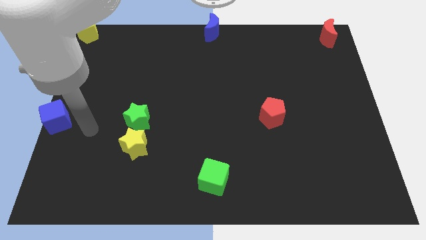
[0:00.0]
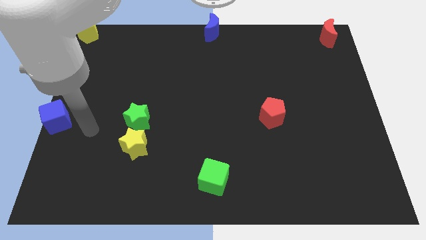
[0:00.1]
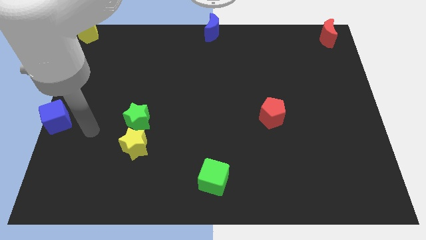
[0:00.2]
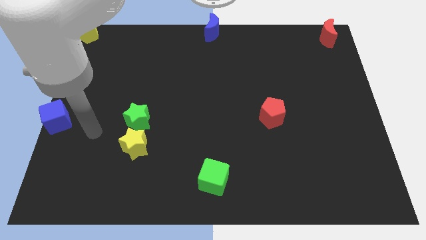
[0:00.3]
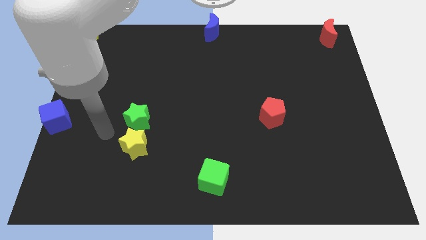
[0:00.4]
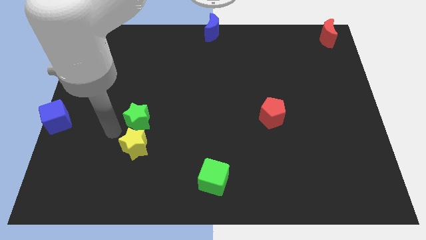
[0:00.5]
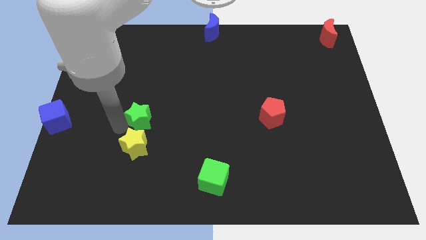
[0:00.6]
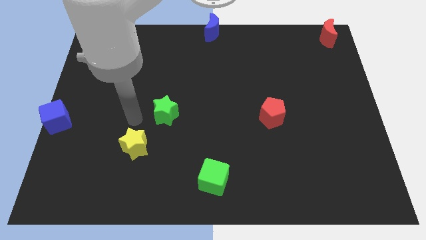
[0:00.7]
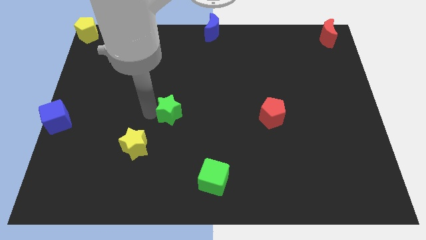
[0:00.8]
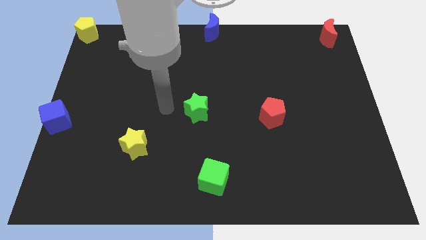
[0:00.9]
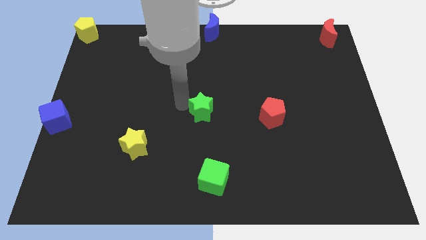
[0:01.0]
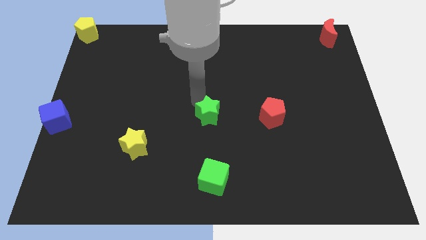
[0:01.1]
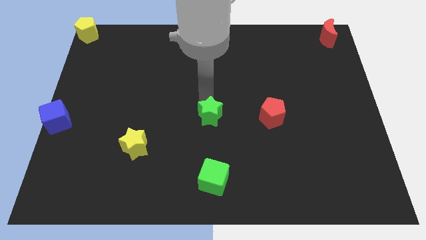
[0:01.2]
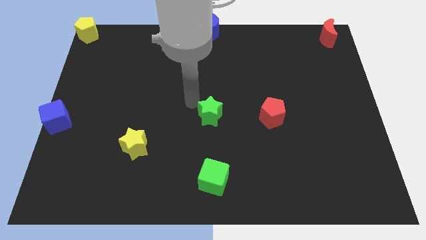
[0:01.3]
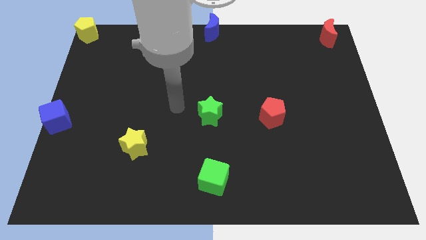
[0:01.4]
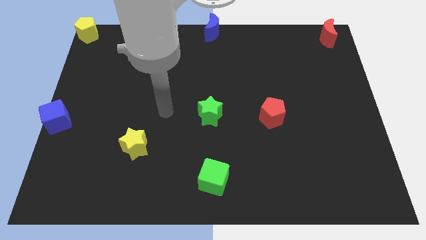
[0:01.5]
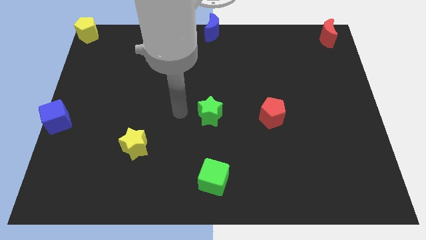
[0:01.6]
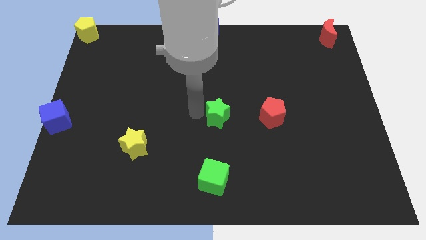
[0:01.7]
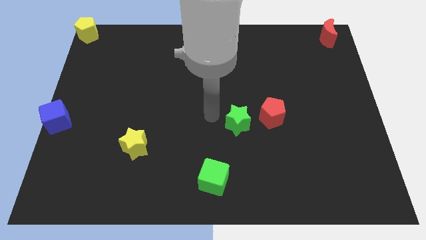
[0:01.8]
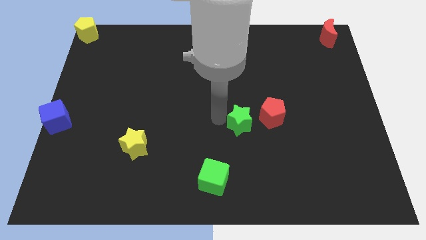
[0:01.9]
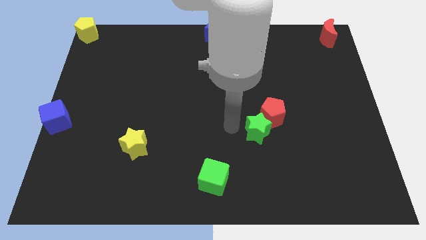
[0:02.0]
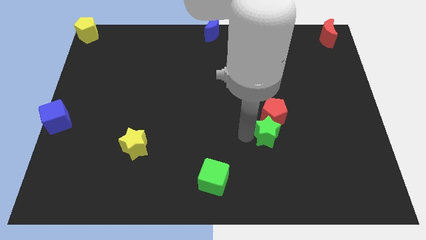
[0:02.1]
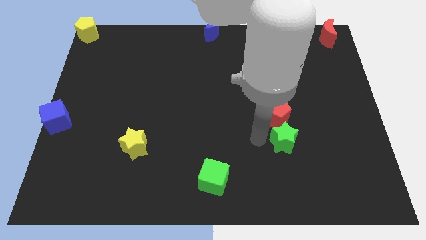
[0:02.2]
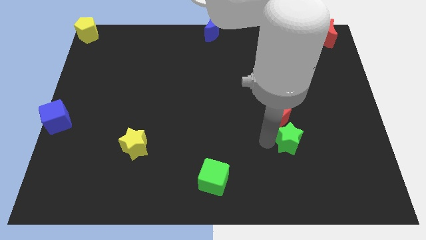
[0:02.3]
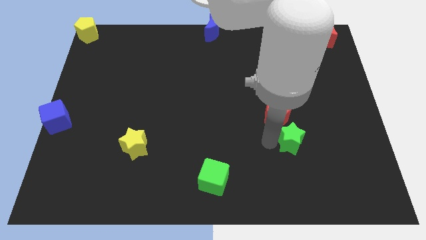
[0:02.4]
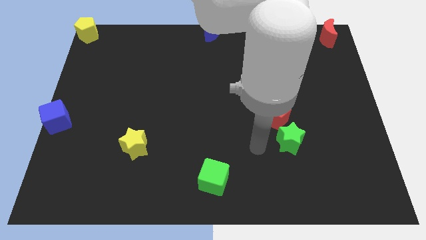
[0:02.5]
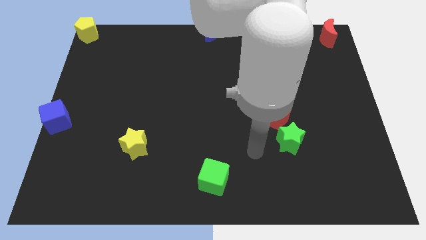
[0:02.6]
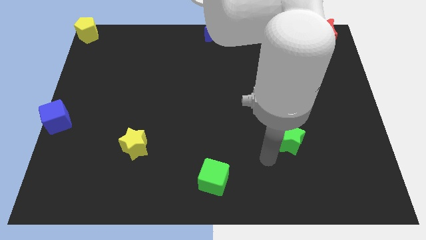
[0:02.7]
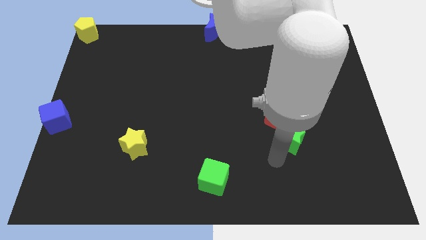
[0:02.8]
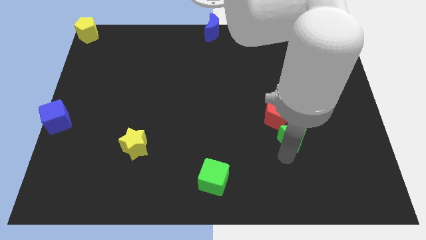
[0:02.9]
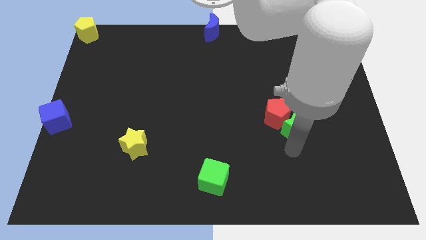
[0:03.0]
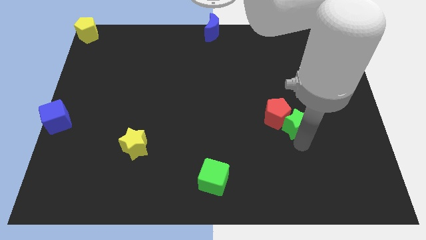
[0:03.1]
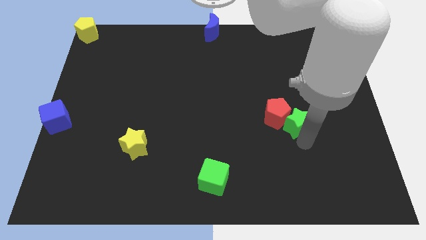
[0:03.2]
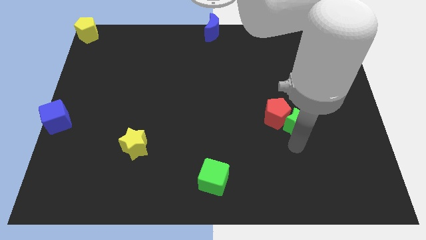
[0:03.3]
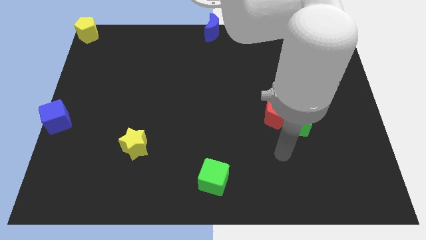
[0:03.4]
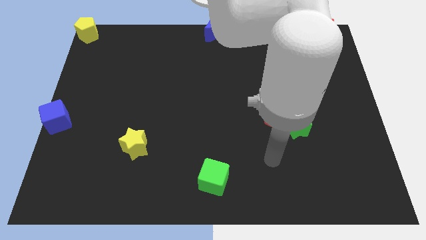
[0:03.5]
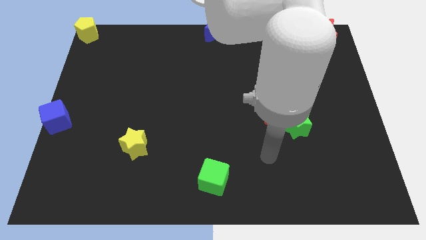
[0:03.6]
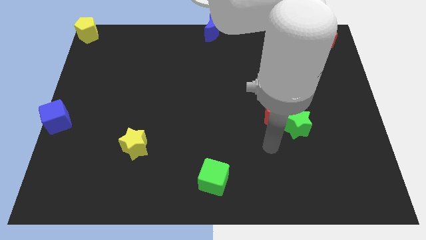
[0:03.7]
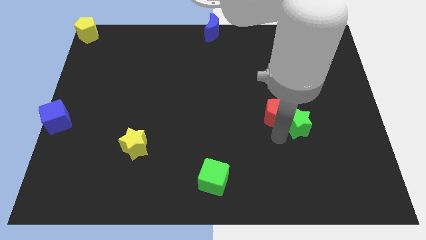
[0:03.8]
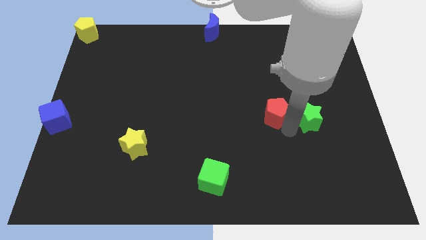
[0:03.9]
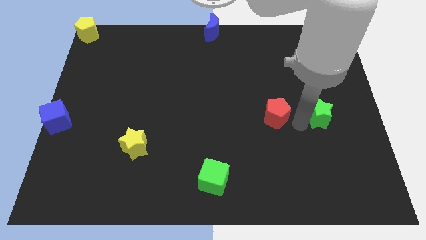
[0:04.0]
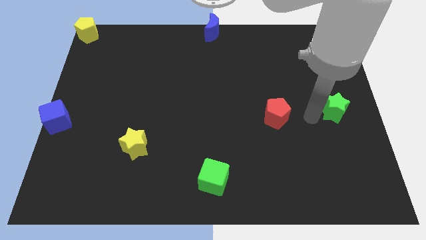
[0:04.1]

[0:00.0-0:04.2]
push the green star to the right of the red pentagon

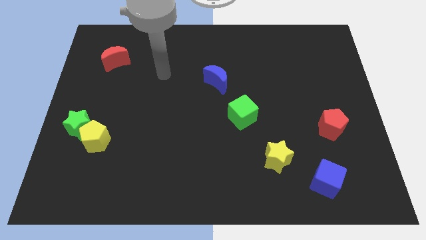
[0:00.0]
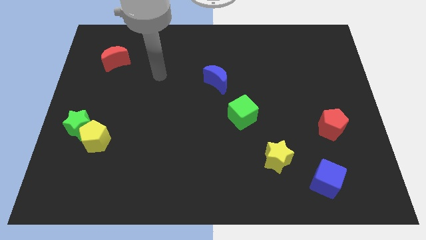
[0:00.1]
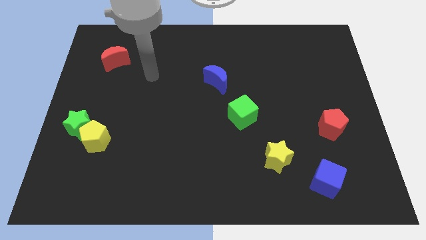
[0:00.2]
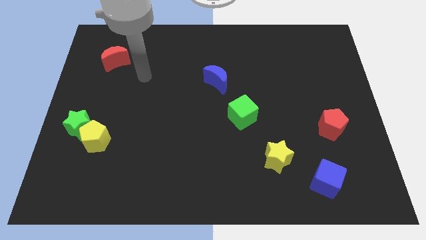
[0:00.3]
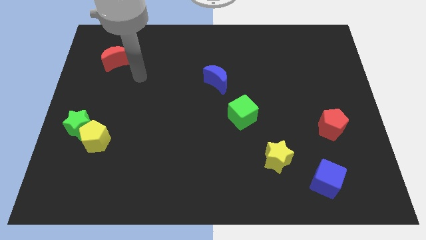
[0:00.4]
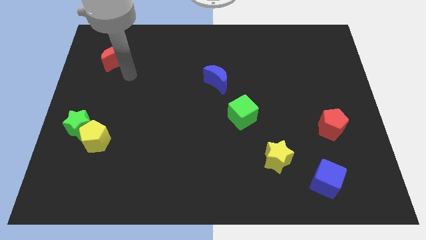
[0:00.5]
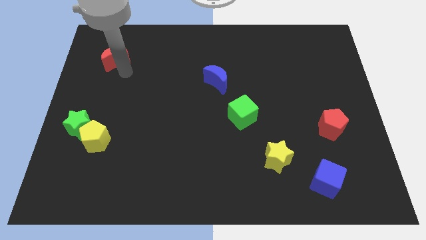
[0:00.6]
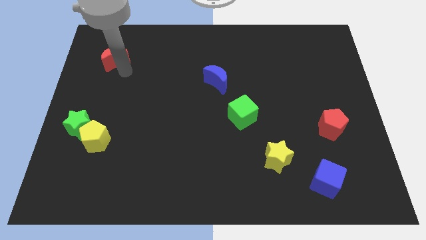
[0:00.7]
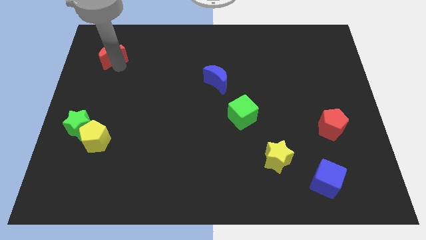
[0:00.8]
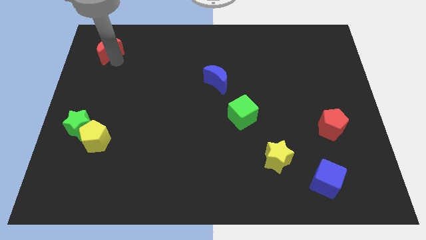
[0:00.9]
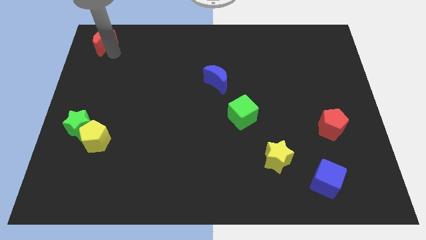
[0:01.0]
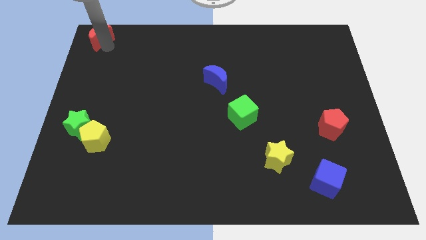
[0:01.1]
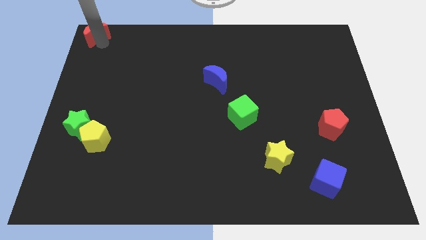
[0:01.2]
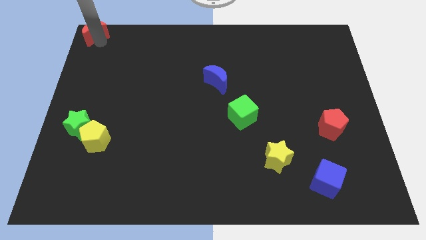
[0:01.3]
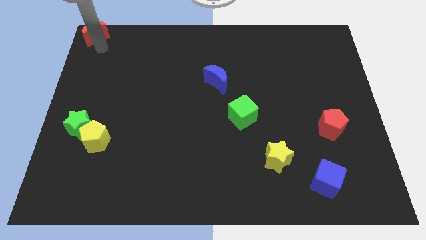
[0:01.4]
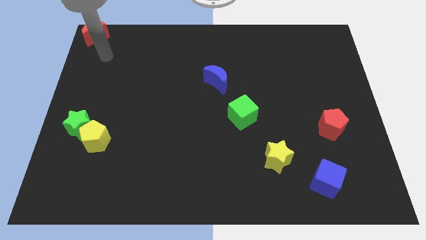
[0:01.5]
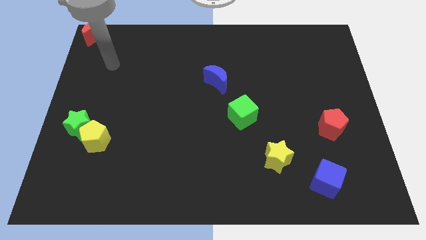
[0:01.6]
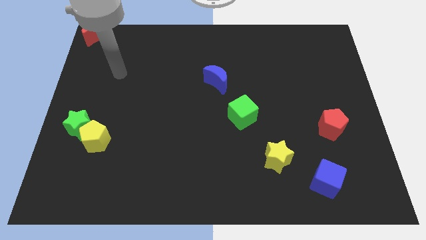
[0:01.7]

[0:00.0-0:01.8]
push the red moon to the top left corner of the board

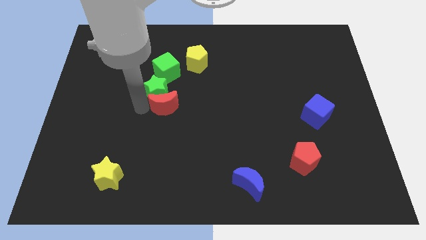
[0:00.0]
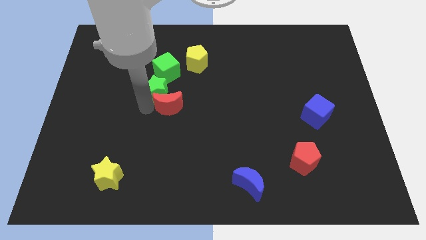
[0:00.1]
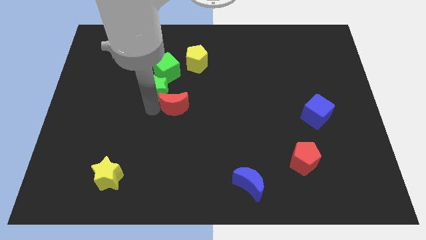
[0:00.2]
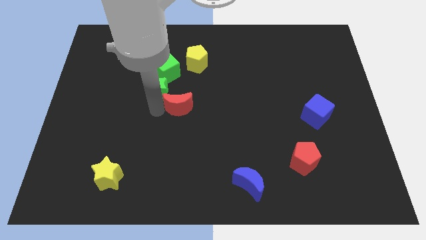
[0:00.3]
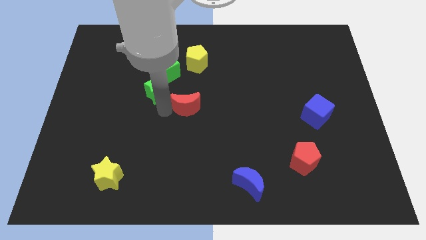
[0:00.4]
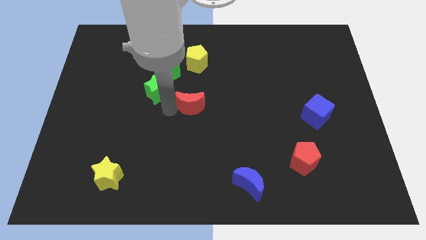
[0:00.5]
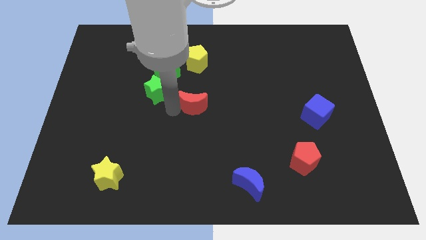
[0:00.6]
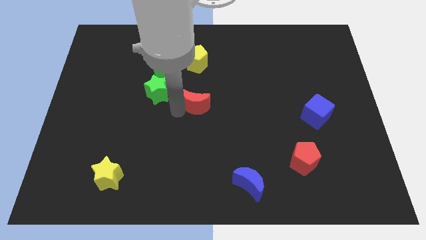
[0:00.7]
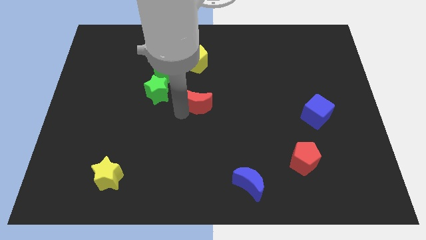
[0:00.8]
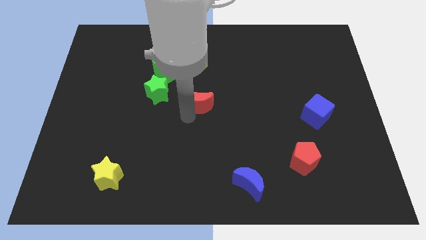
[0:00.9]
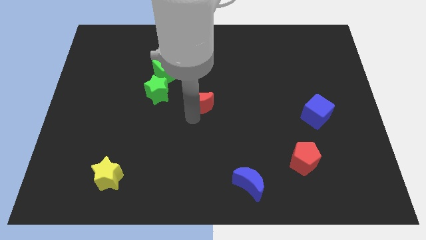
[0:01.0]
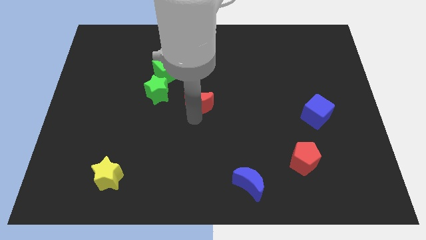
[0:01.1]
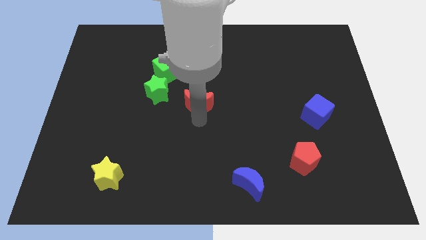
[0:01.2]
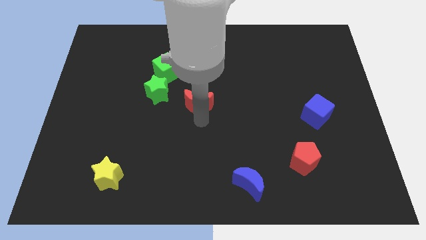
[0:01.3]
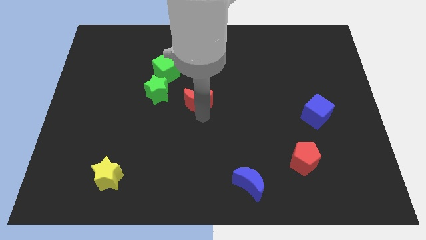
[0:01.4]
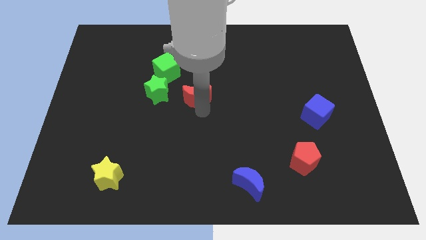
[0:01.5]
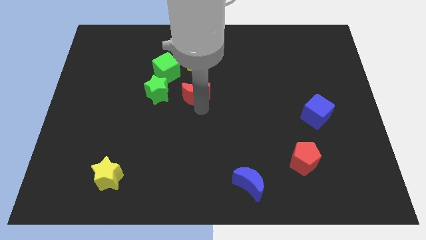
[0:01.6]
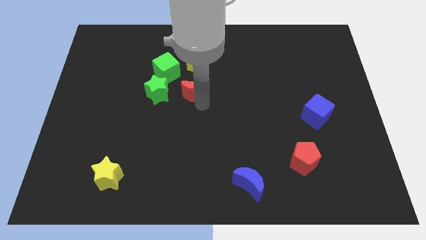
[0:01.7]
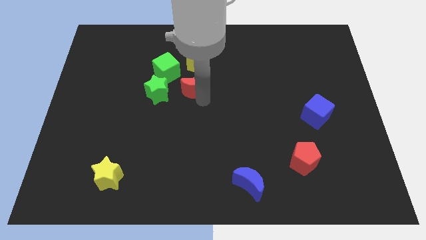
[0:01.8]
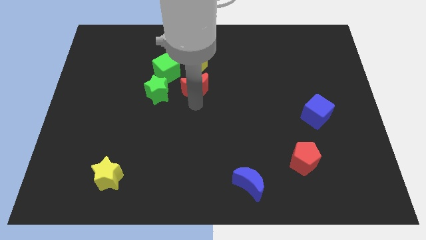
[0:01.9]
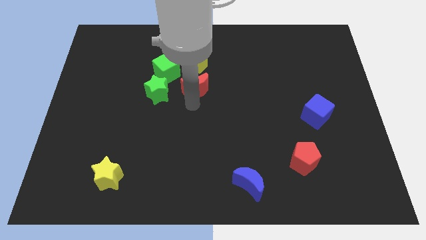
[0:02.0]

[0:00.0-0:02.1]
move the red moon vertically below the yellow pentagon

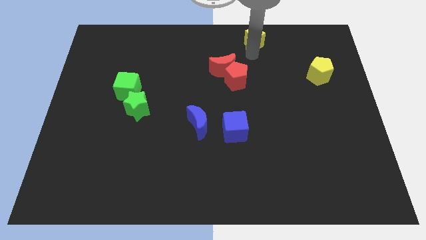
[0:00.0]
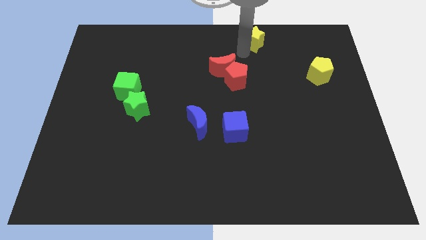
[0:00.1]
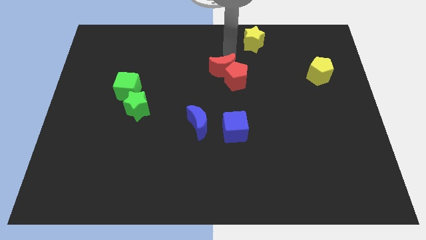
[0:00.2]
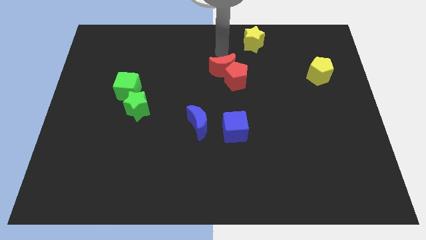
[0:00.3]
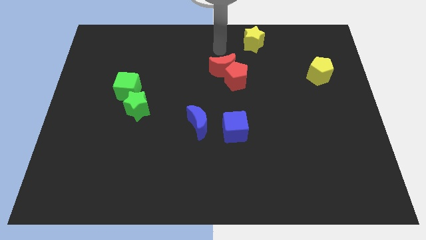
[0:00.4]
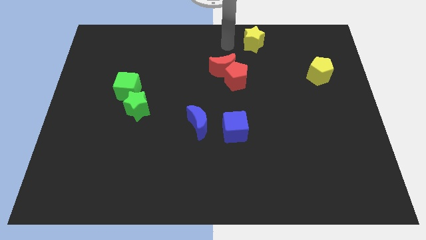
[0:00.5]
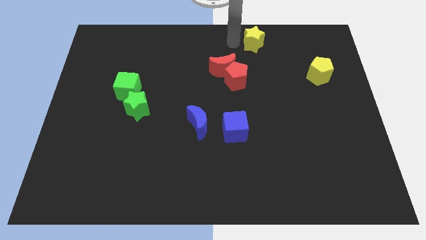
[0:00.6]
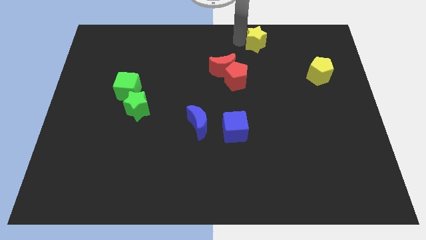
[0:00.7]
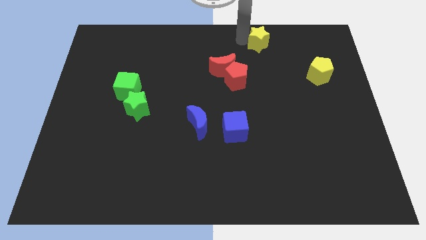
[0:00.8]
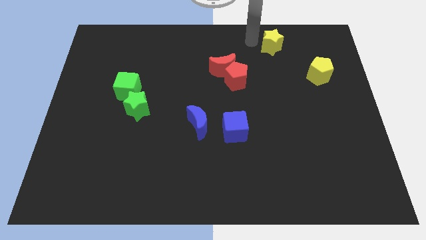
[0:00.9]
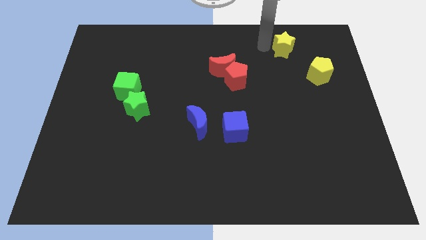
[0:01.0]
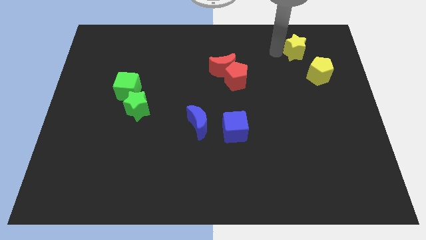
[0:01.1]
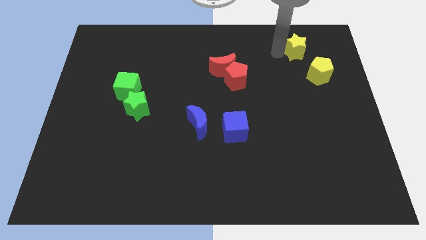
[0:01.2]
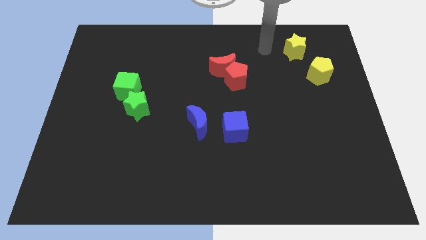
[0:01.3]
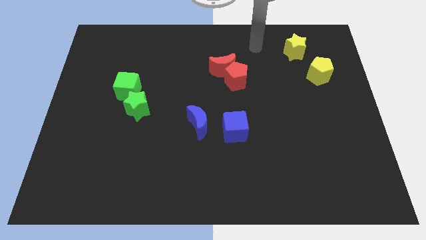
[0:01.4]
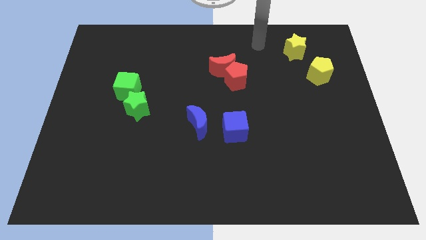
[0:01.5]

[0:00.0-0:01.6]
move the yellow star diagonal left to the yellow pentagon
